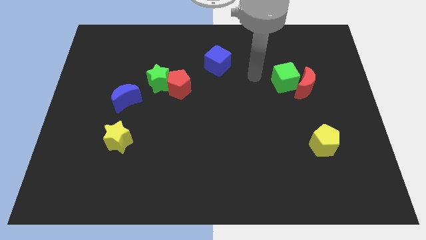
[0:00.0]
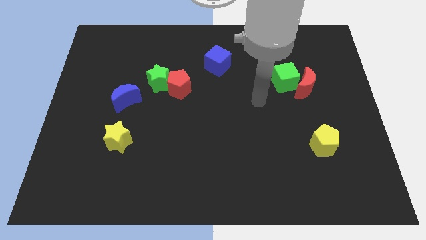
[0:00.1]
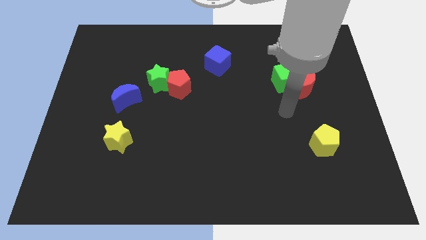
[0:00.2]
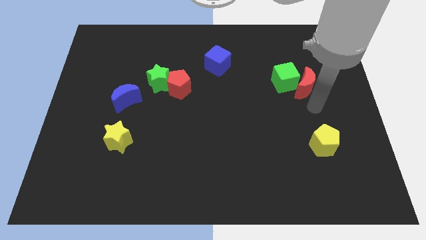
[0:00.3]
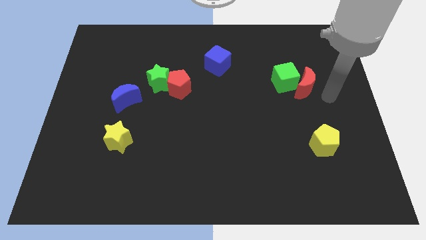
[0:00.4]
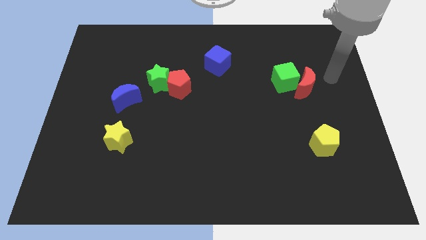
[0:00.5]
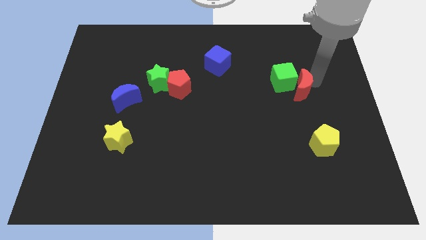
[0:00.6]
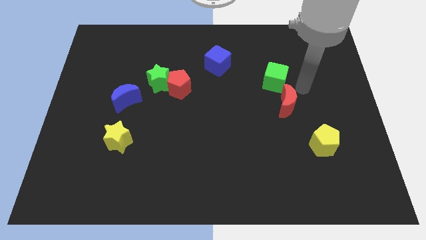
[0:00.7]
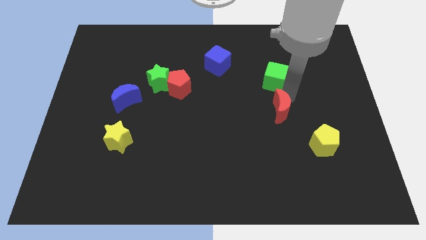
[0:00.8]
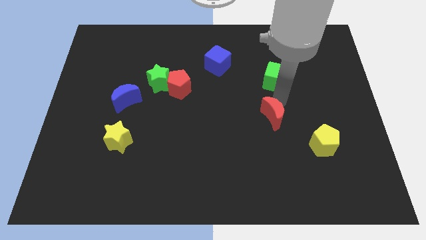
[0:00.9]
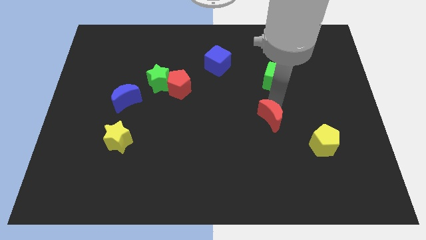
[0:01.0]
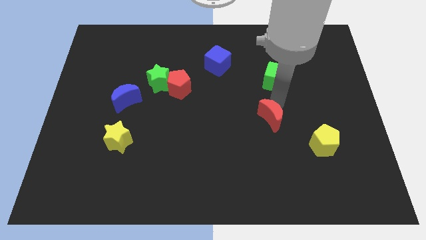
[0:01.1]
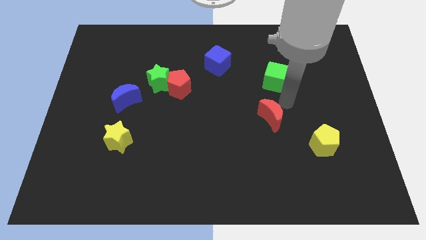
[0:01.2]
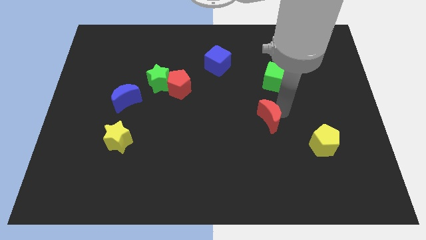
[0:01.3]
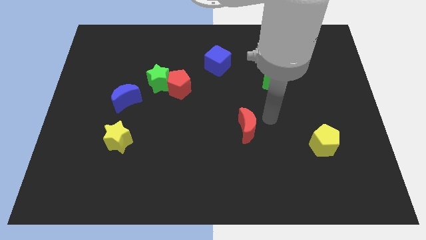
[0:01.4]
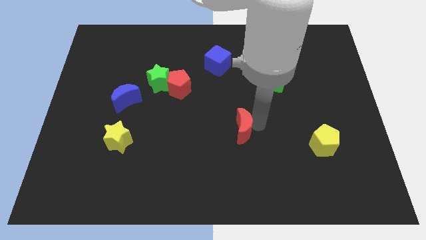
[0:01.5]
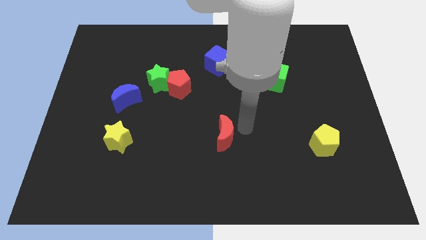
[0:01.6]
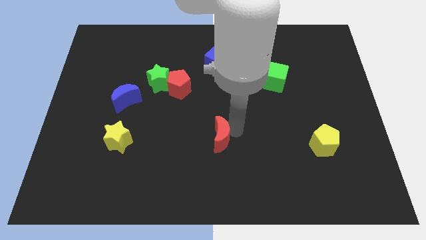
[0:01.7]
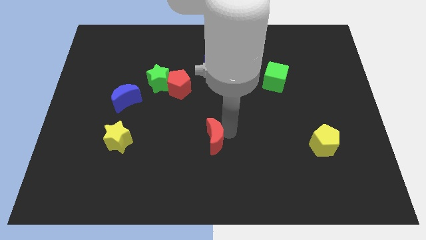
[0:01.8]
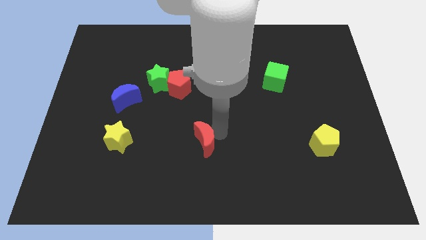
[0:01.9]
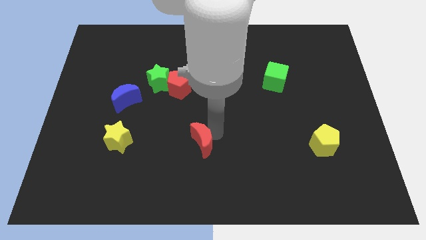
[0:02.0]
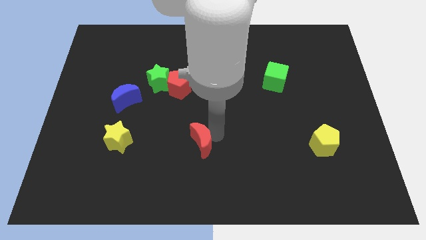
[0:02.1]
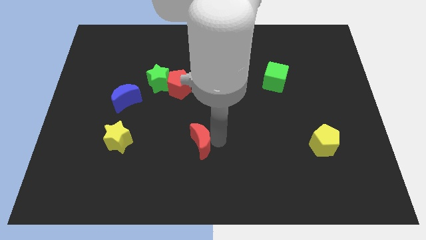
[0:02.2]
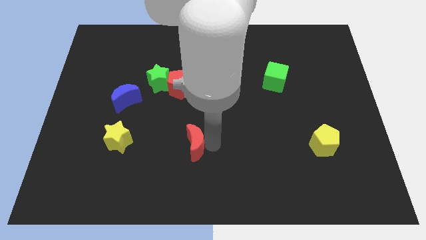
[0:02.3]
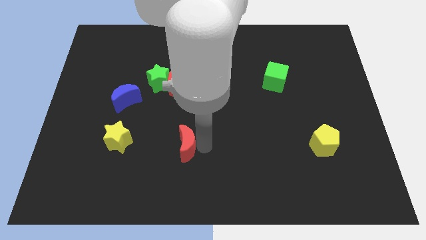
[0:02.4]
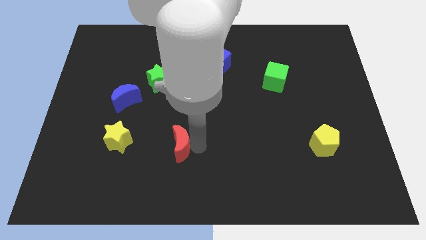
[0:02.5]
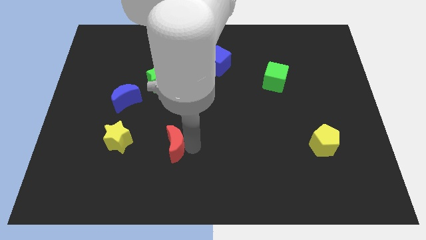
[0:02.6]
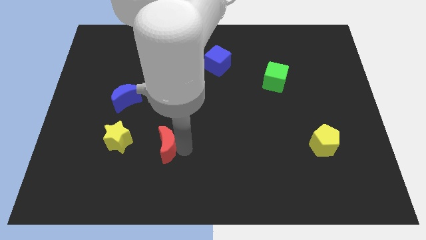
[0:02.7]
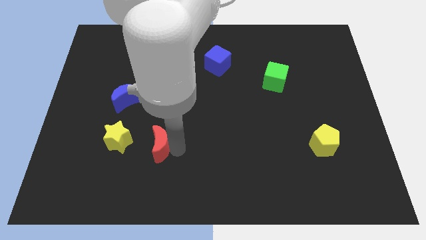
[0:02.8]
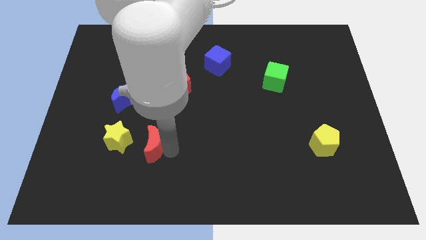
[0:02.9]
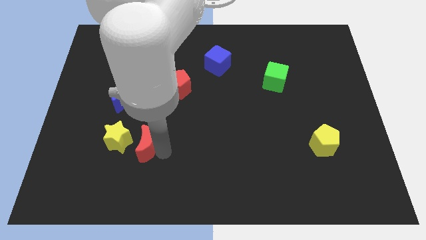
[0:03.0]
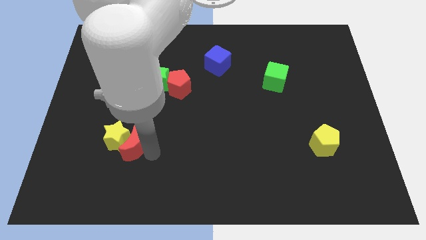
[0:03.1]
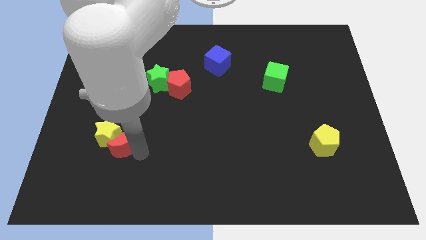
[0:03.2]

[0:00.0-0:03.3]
put the red moon close to the yellow star

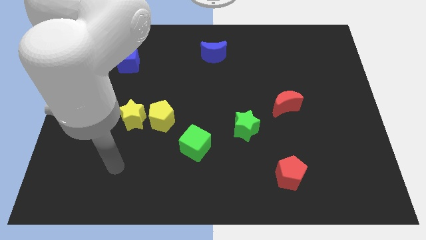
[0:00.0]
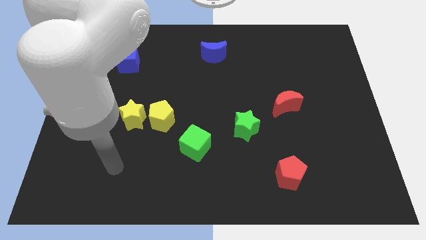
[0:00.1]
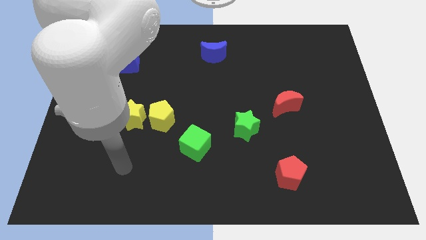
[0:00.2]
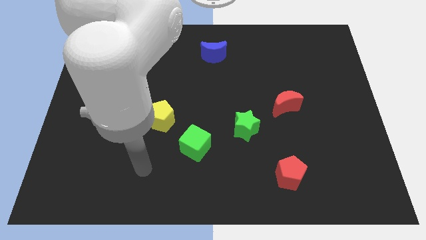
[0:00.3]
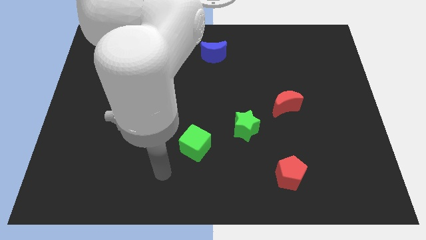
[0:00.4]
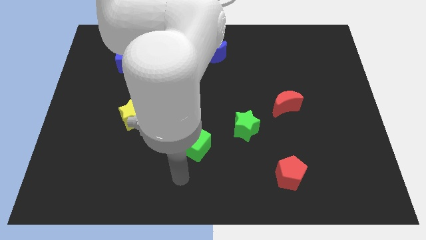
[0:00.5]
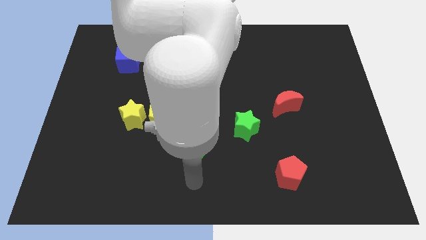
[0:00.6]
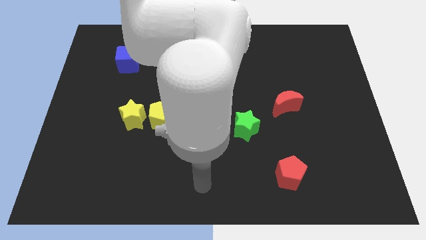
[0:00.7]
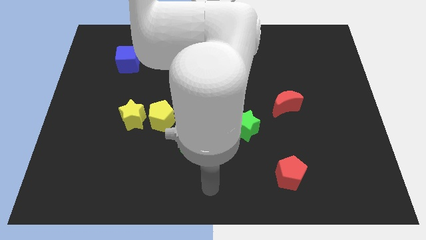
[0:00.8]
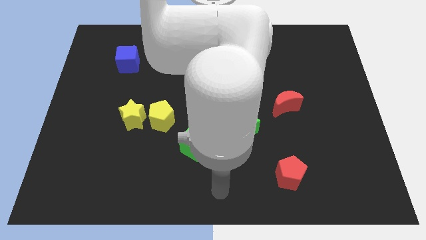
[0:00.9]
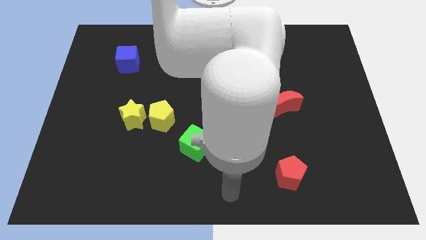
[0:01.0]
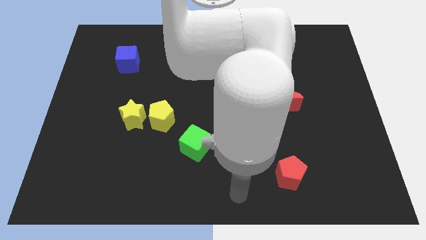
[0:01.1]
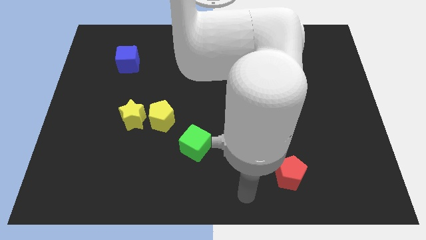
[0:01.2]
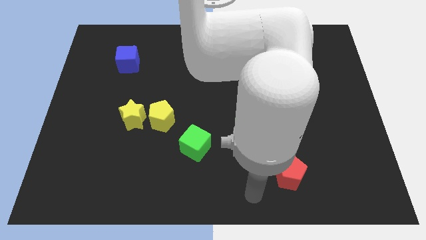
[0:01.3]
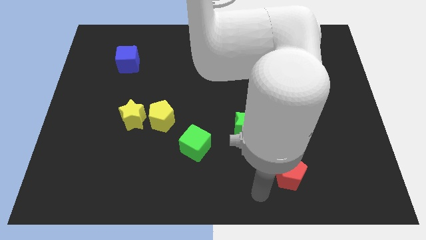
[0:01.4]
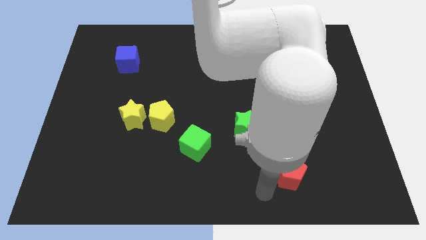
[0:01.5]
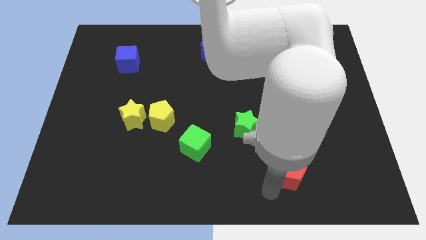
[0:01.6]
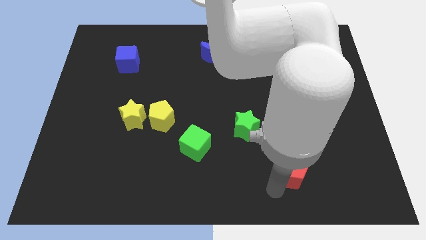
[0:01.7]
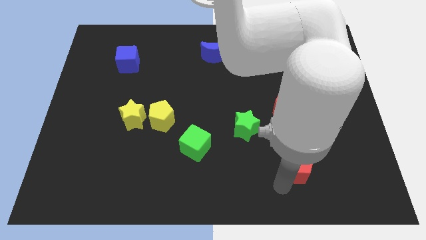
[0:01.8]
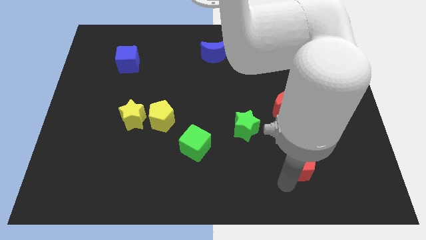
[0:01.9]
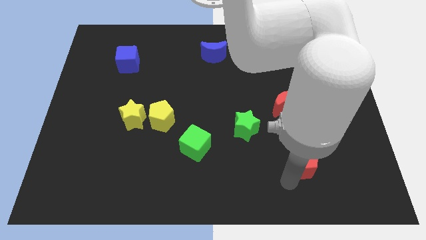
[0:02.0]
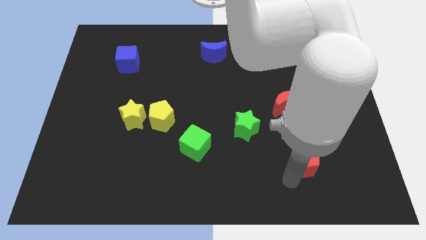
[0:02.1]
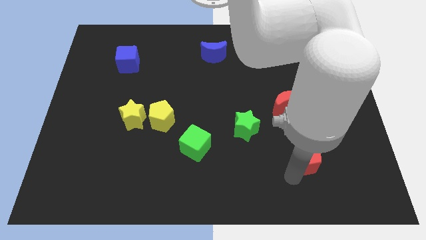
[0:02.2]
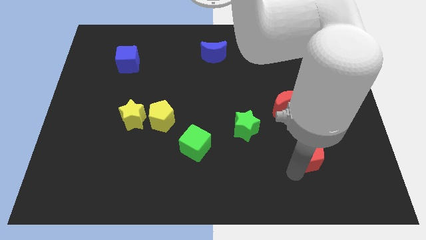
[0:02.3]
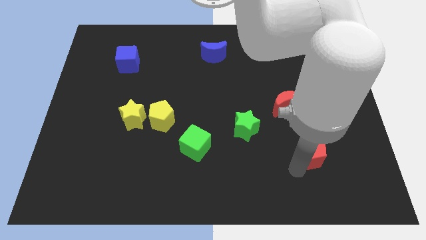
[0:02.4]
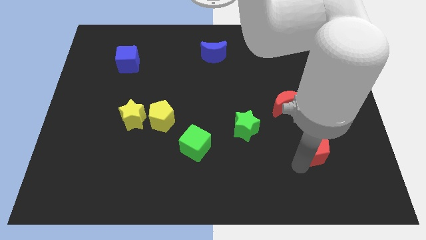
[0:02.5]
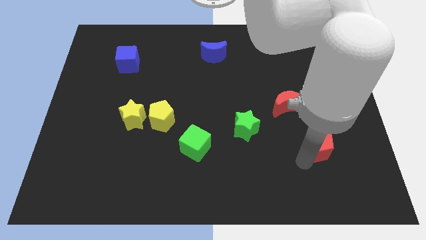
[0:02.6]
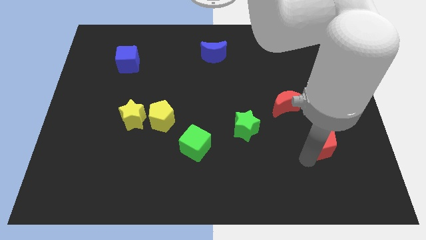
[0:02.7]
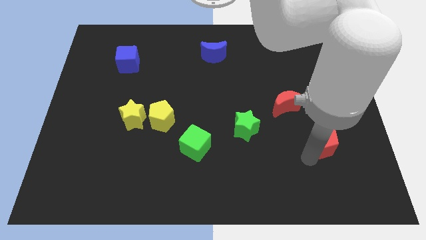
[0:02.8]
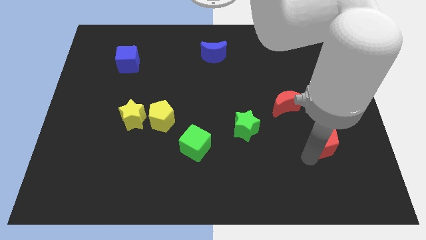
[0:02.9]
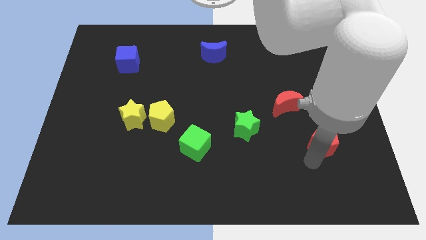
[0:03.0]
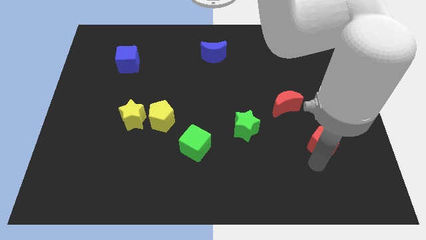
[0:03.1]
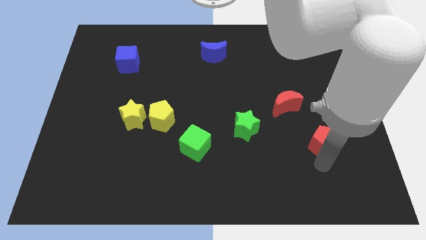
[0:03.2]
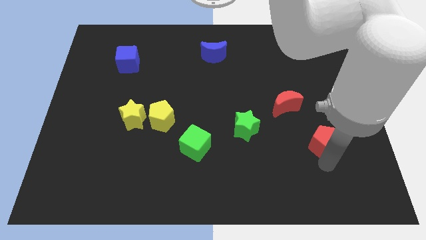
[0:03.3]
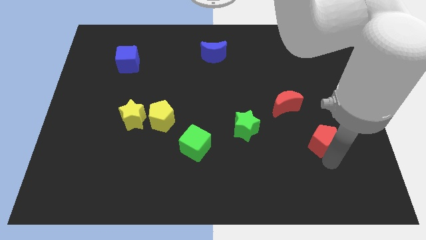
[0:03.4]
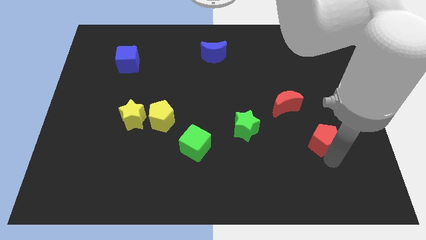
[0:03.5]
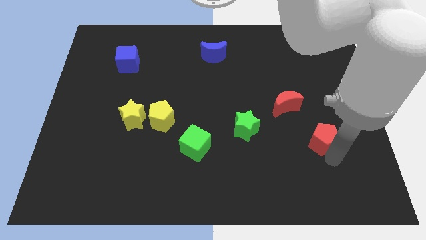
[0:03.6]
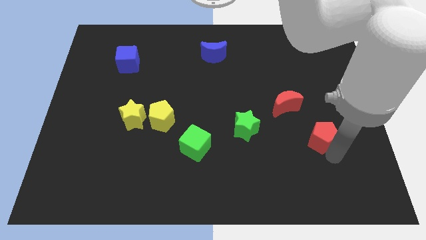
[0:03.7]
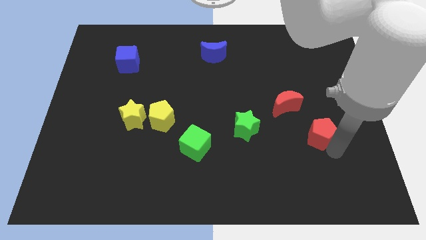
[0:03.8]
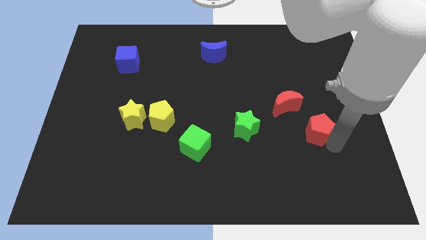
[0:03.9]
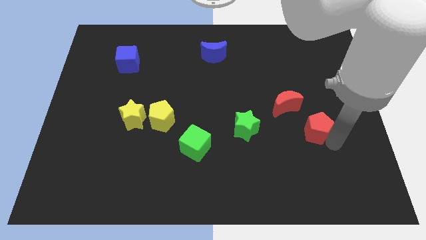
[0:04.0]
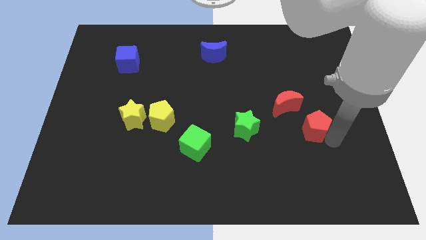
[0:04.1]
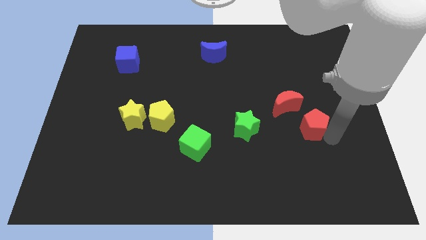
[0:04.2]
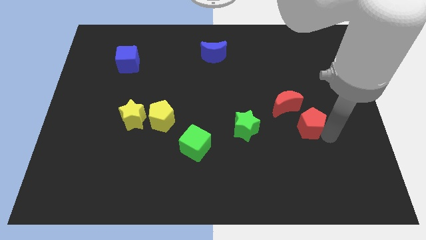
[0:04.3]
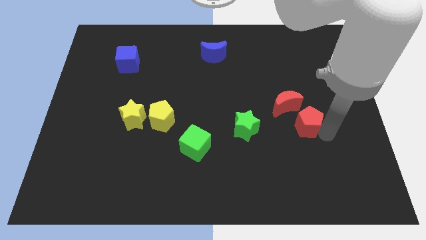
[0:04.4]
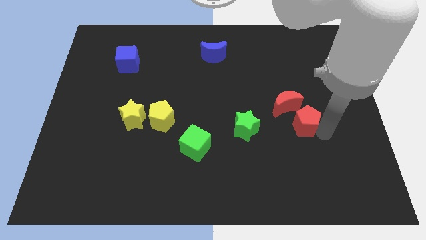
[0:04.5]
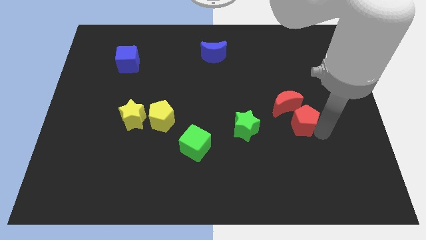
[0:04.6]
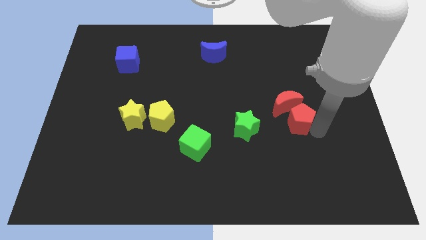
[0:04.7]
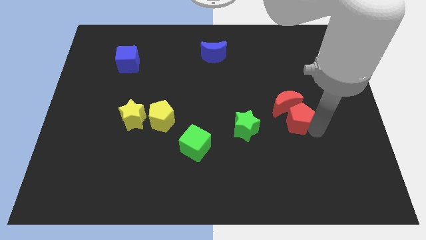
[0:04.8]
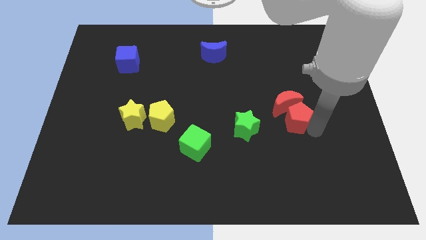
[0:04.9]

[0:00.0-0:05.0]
push the red pentagon to the red moon
